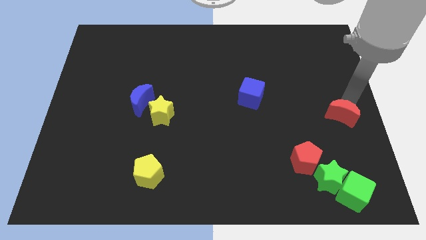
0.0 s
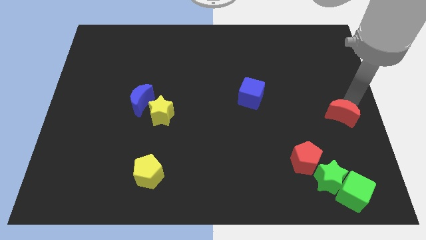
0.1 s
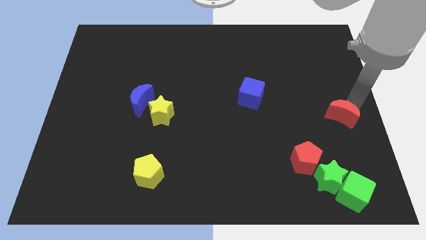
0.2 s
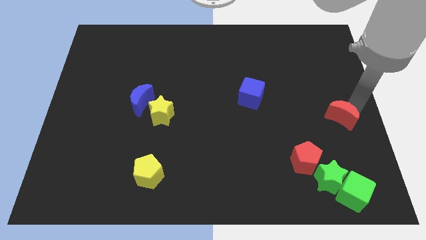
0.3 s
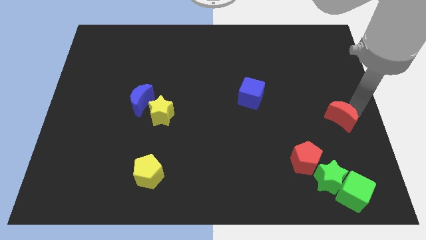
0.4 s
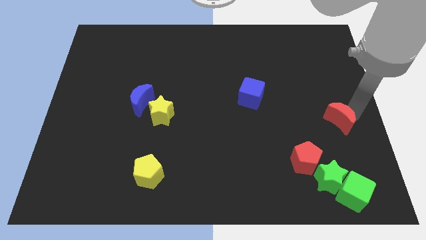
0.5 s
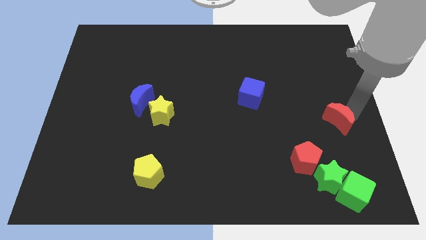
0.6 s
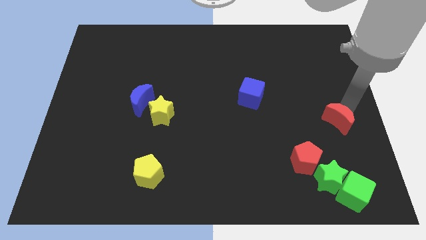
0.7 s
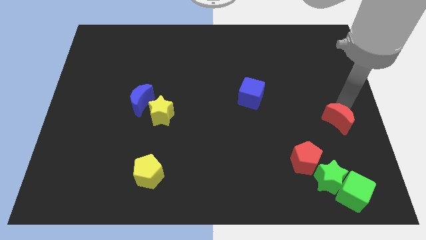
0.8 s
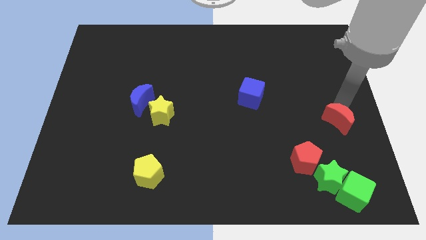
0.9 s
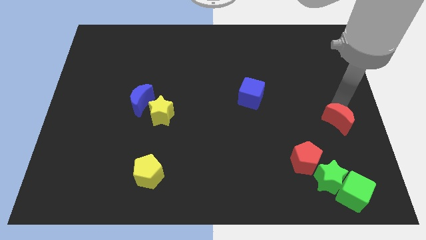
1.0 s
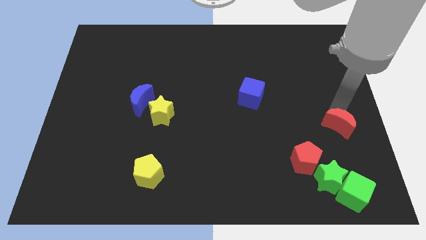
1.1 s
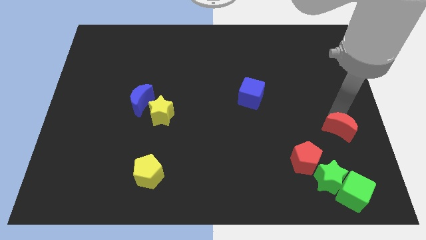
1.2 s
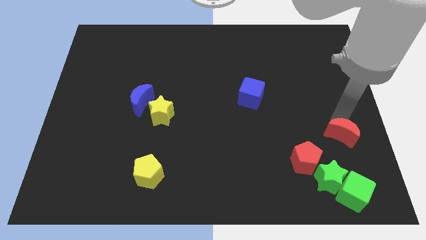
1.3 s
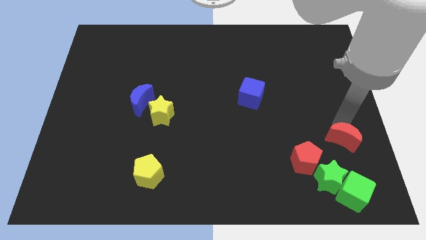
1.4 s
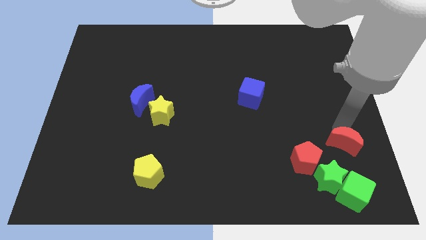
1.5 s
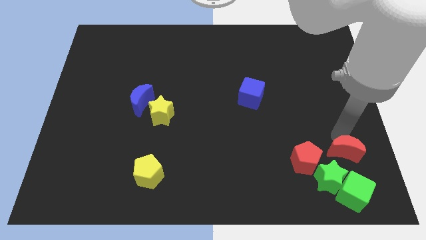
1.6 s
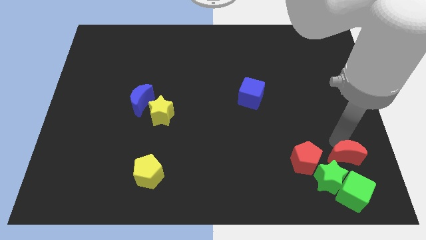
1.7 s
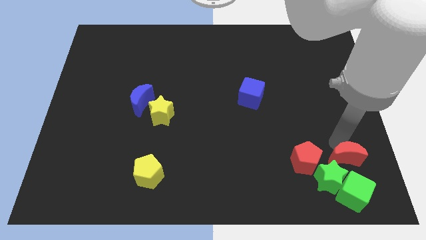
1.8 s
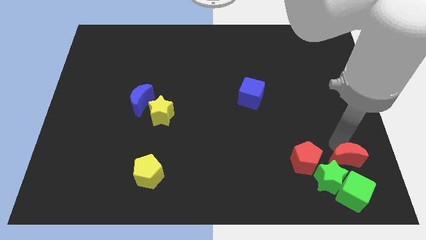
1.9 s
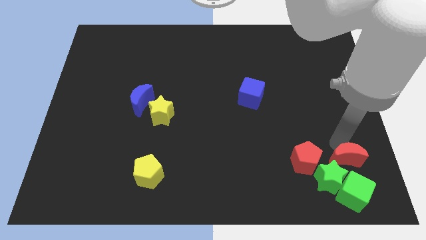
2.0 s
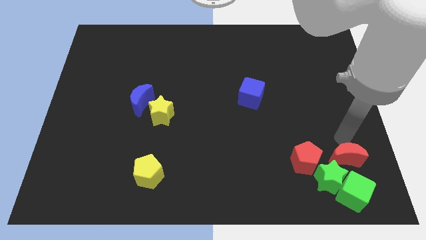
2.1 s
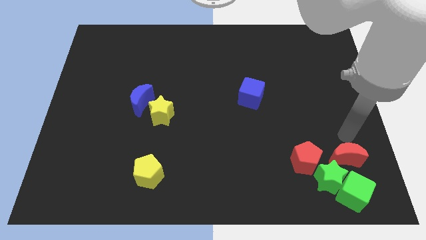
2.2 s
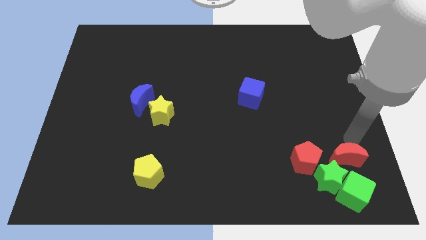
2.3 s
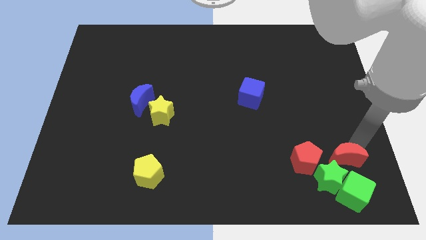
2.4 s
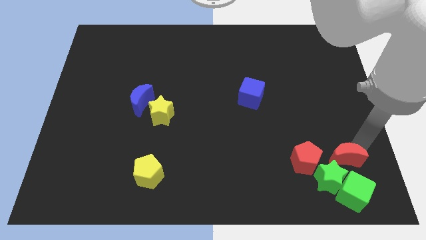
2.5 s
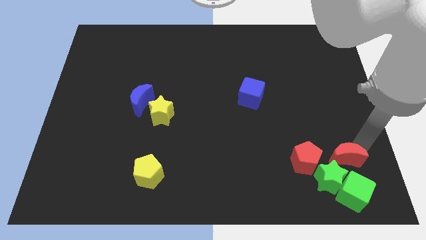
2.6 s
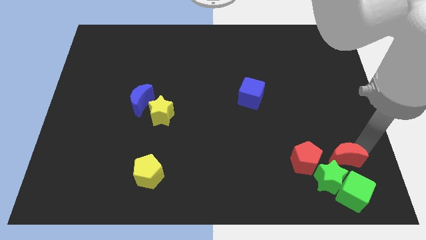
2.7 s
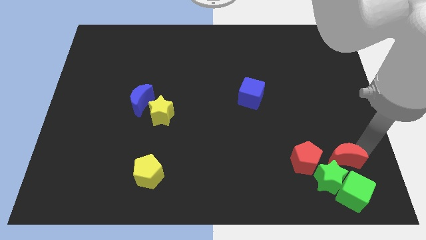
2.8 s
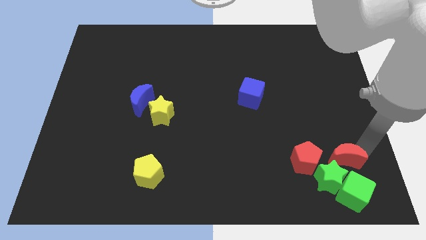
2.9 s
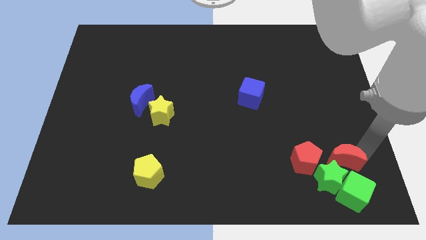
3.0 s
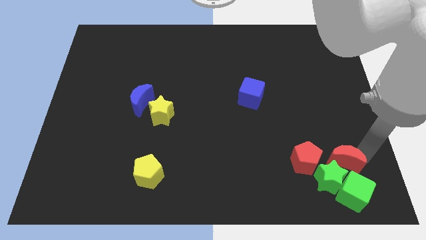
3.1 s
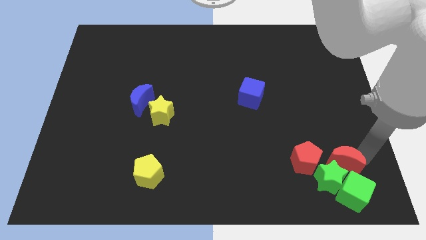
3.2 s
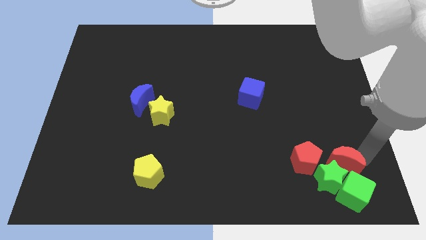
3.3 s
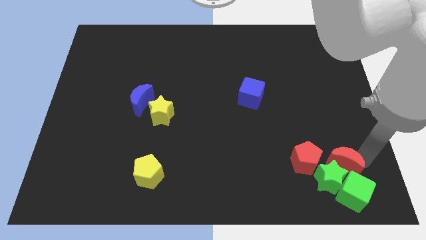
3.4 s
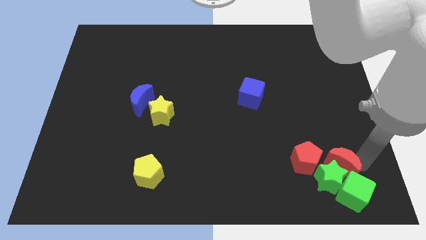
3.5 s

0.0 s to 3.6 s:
place the red moon at the top side of the green star

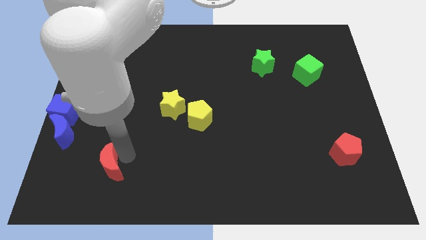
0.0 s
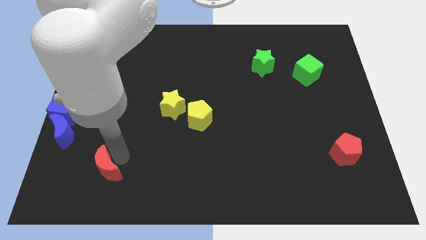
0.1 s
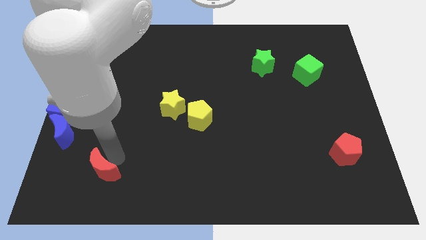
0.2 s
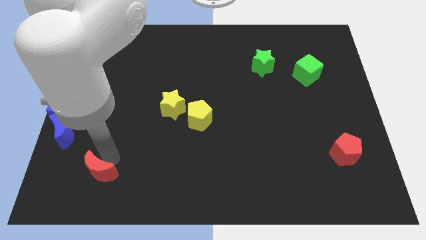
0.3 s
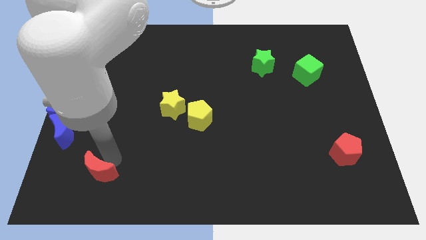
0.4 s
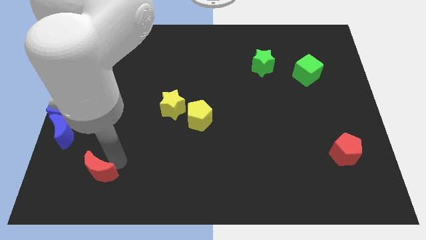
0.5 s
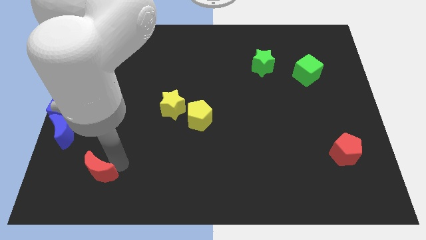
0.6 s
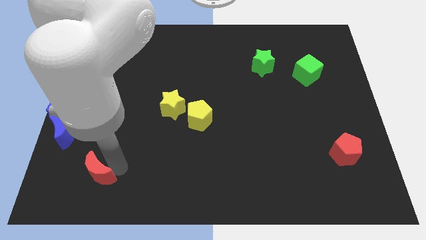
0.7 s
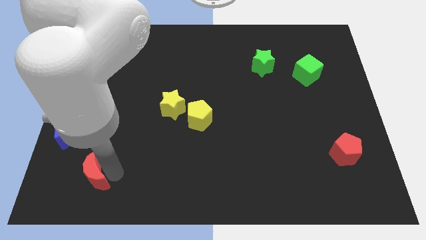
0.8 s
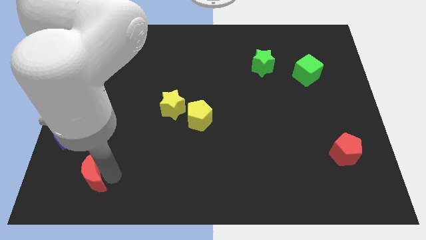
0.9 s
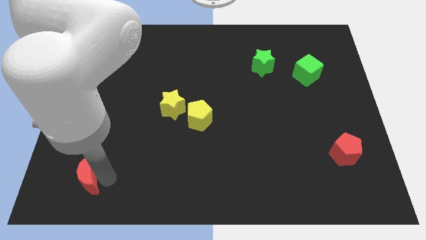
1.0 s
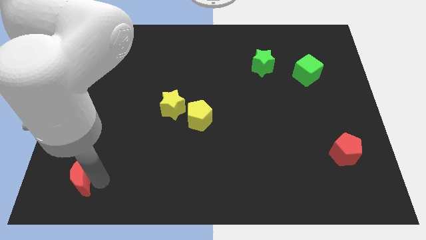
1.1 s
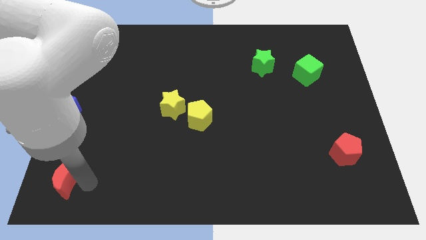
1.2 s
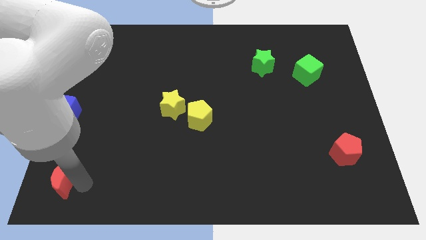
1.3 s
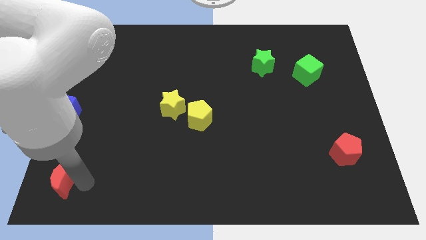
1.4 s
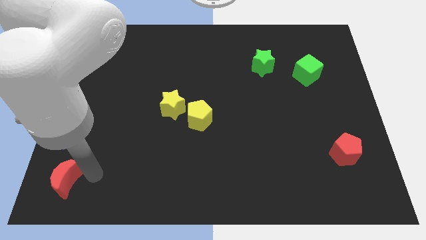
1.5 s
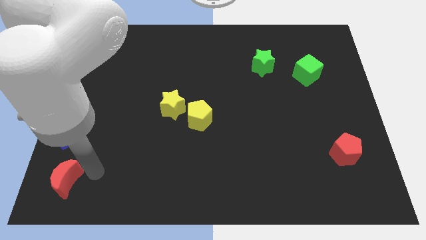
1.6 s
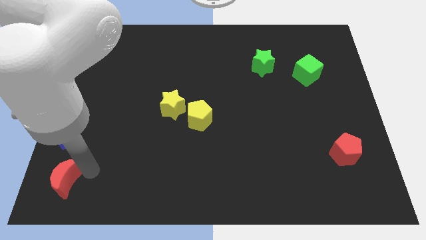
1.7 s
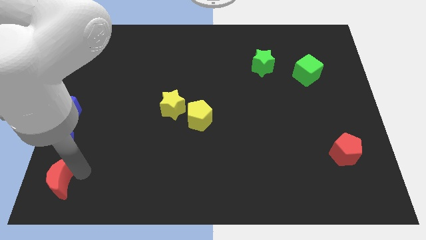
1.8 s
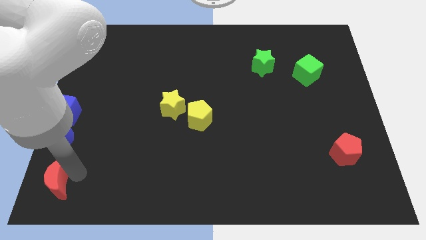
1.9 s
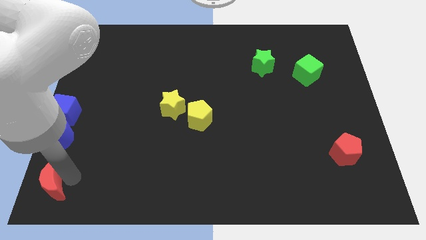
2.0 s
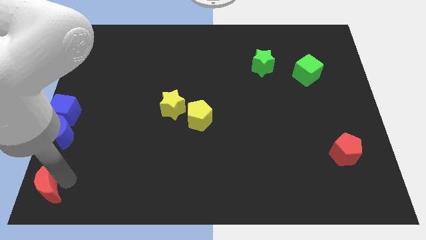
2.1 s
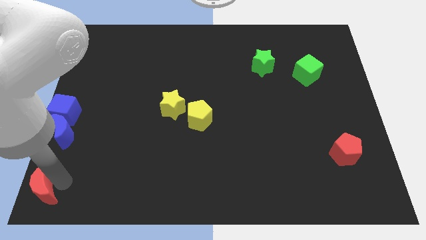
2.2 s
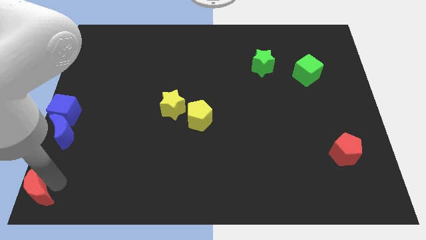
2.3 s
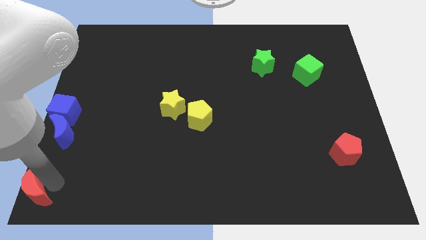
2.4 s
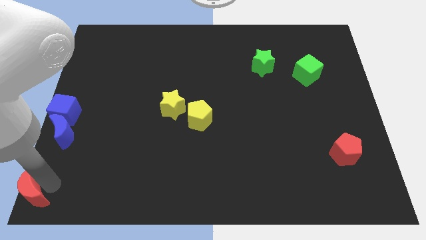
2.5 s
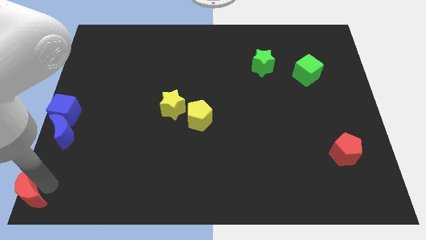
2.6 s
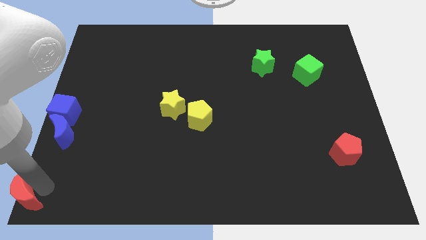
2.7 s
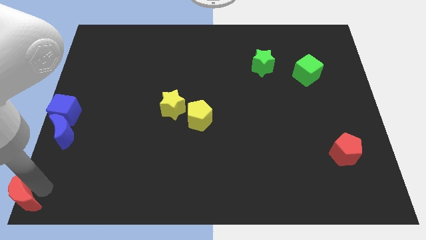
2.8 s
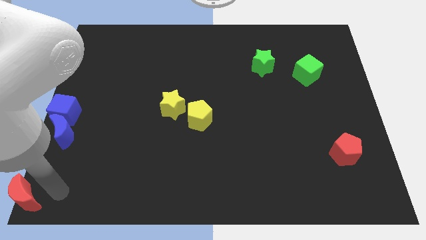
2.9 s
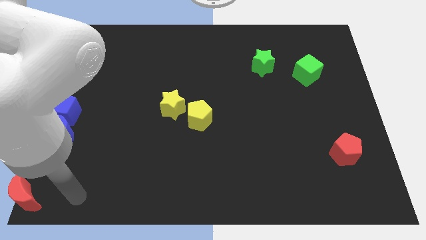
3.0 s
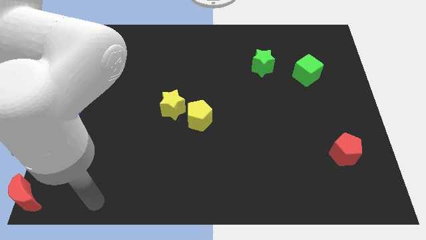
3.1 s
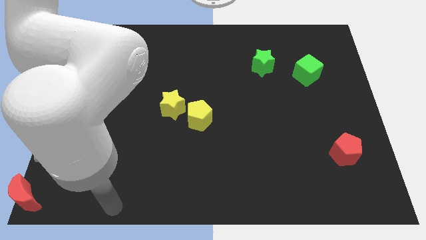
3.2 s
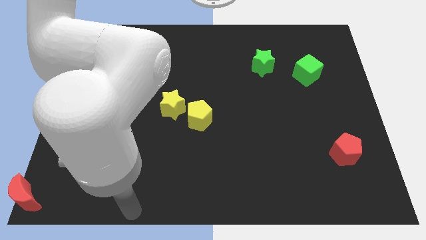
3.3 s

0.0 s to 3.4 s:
place the red crescent at the bottom left corner of the board

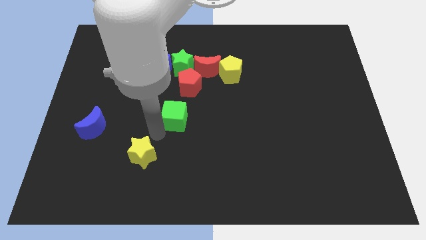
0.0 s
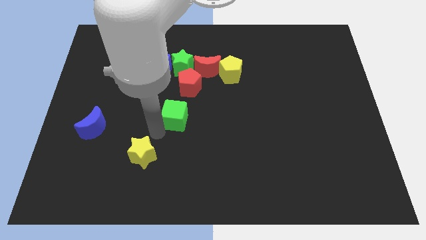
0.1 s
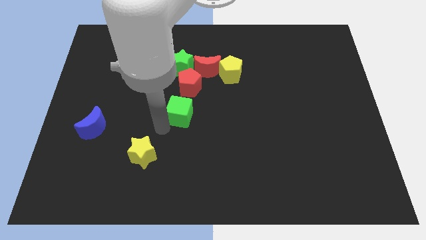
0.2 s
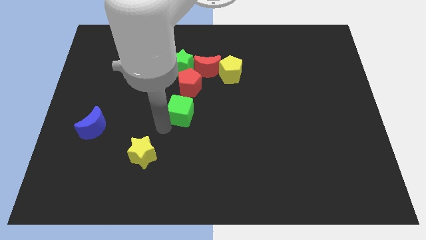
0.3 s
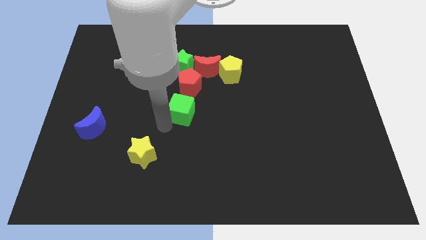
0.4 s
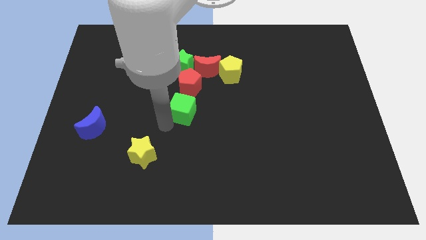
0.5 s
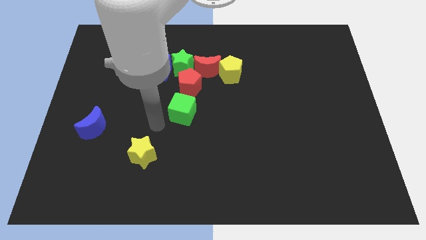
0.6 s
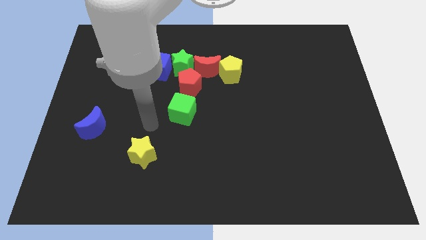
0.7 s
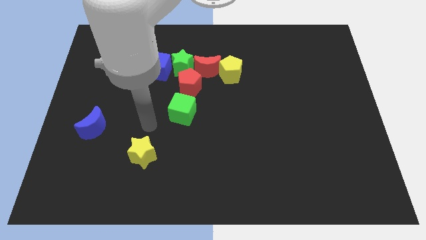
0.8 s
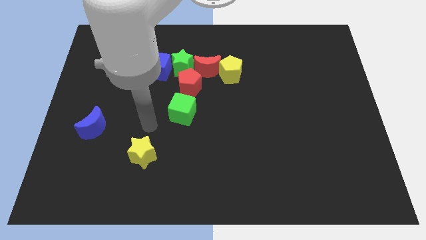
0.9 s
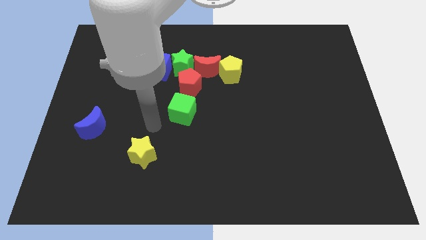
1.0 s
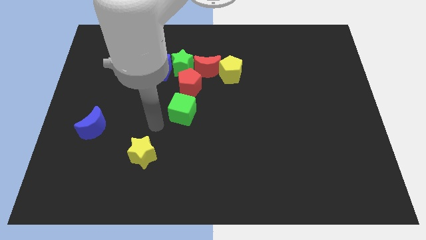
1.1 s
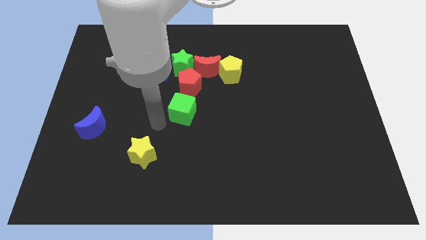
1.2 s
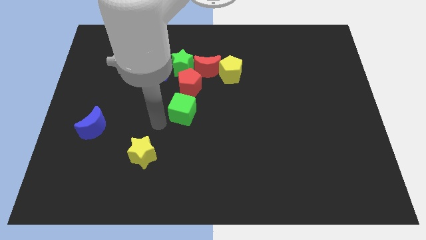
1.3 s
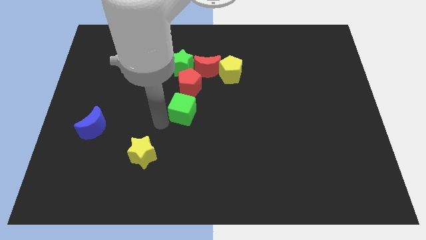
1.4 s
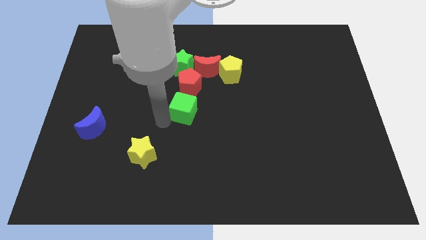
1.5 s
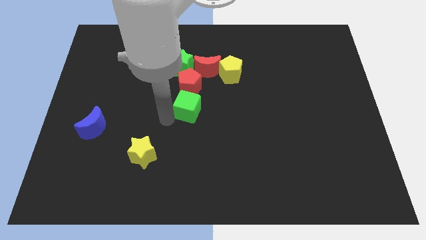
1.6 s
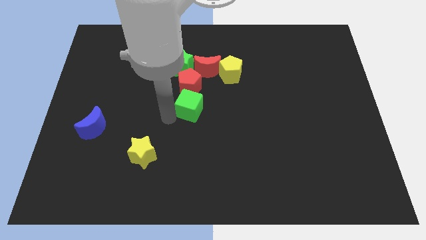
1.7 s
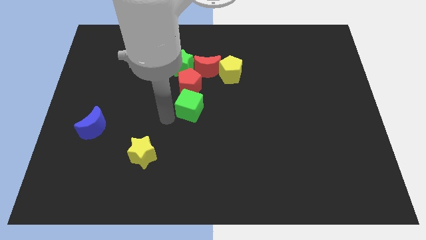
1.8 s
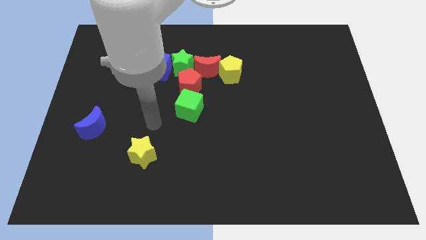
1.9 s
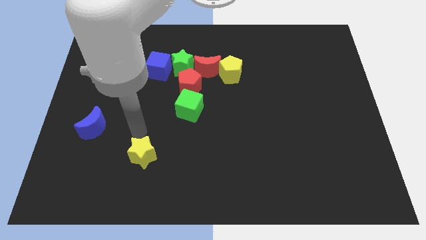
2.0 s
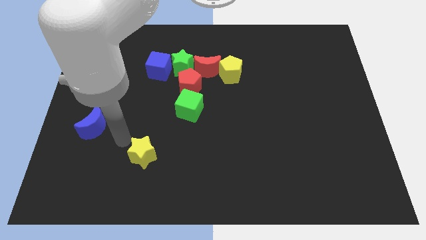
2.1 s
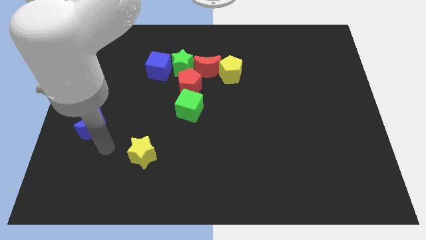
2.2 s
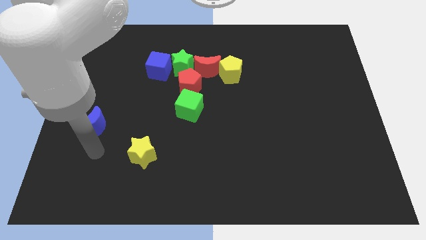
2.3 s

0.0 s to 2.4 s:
place the green cube below to the red pentagon
